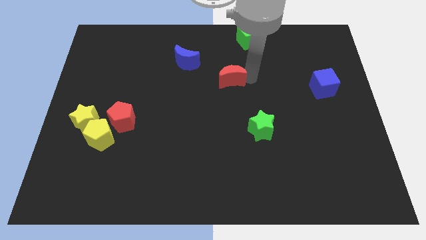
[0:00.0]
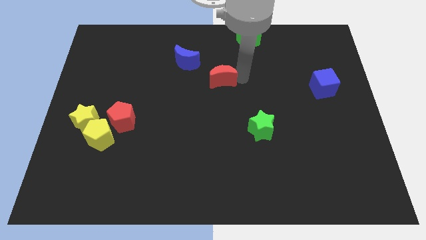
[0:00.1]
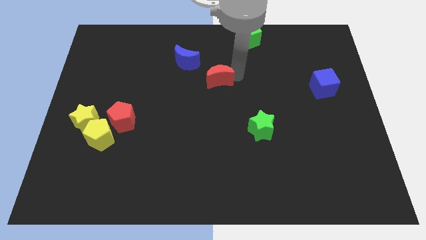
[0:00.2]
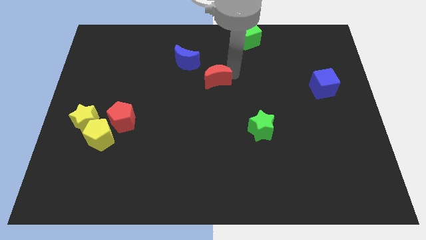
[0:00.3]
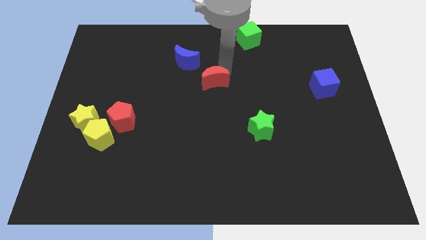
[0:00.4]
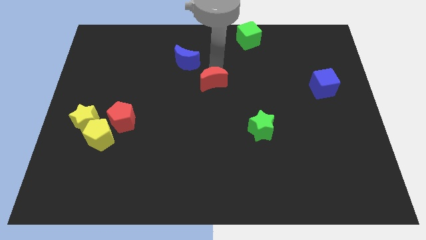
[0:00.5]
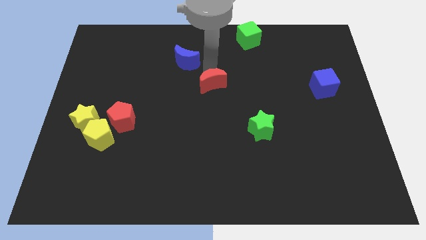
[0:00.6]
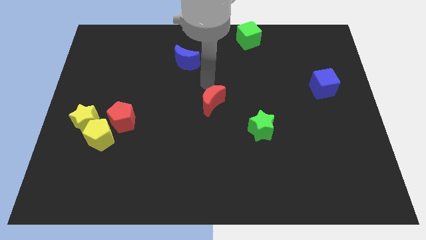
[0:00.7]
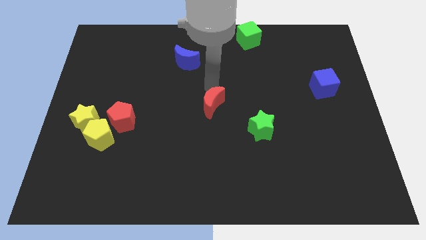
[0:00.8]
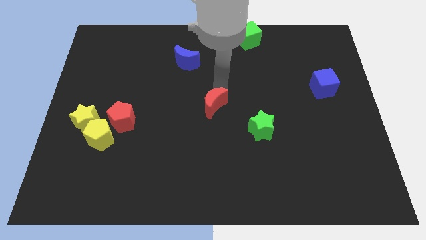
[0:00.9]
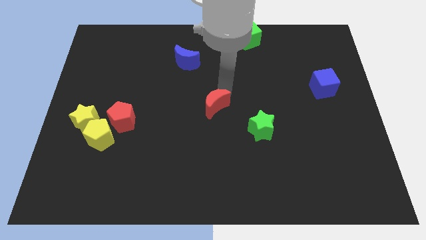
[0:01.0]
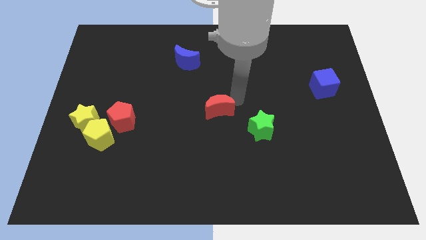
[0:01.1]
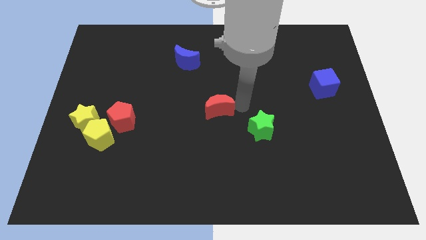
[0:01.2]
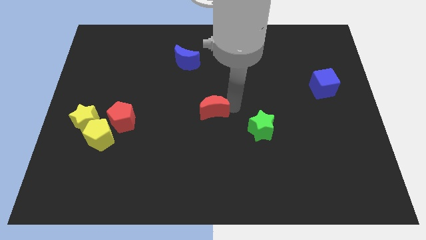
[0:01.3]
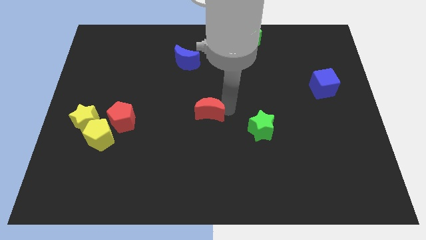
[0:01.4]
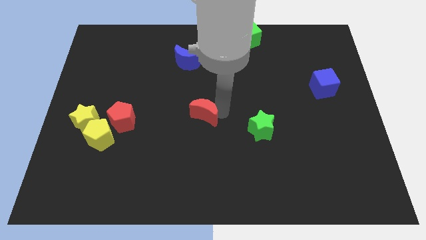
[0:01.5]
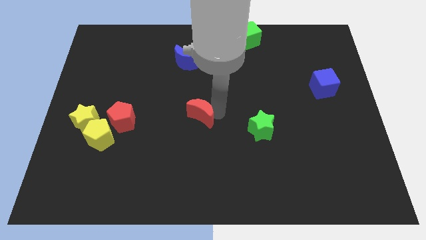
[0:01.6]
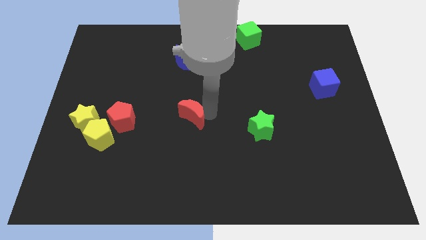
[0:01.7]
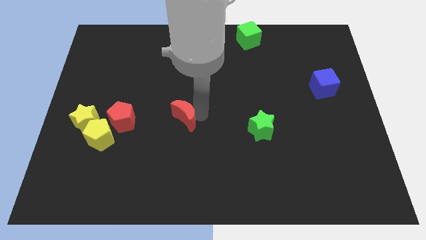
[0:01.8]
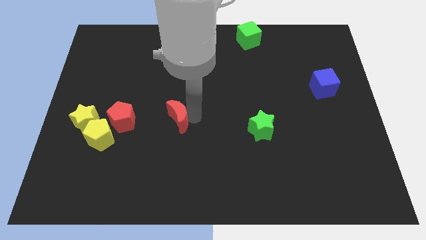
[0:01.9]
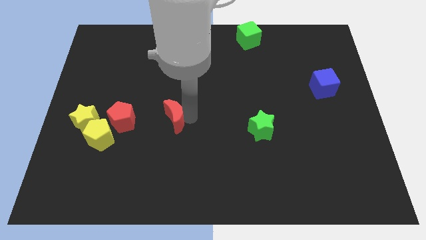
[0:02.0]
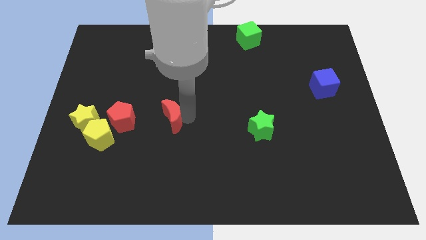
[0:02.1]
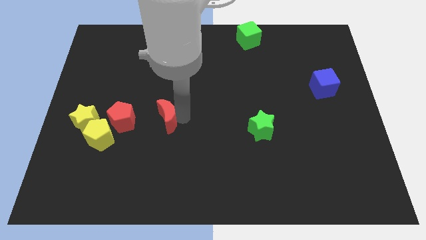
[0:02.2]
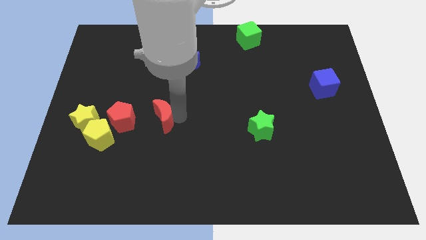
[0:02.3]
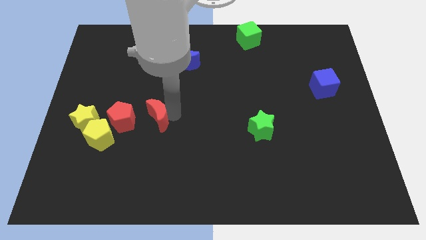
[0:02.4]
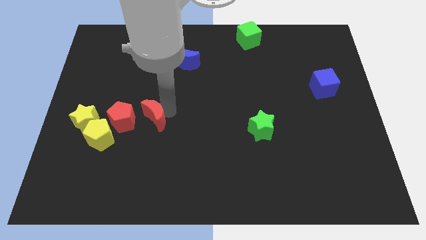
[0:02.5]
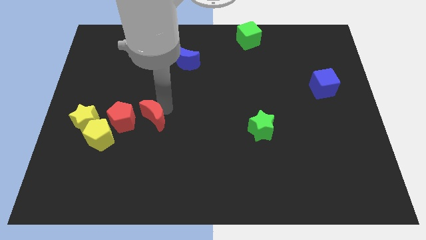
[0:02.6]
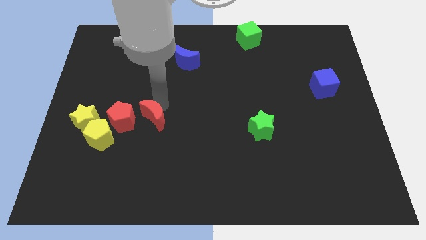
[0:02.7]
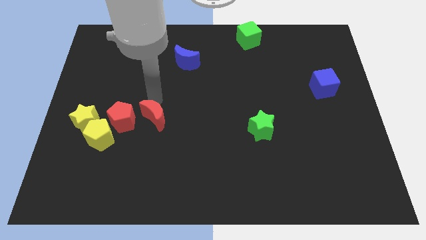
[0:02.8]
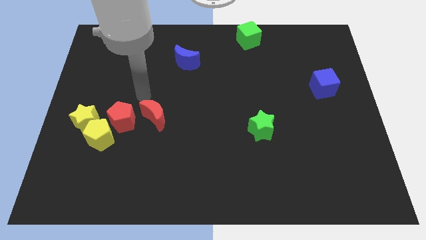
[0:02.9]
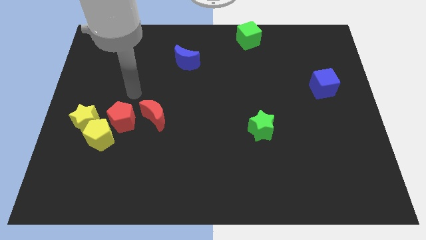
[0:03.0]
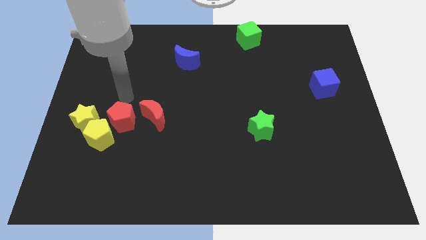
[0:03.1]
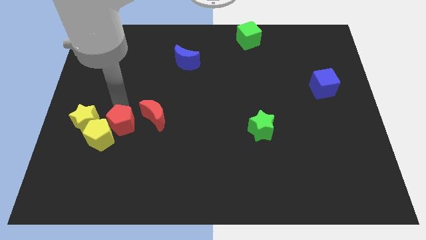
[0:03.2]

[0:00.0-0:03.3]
put the red moon on the right side of the red pentagon horizontally

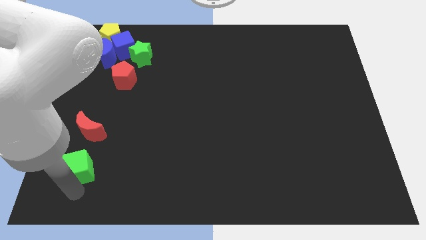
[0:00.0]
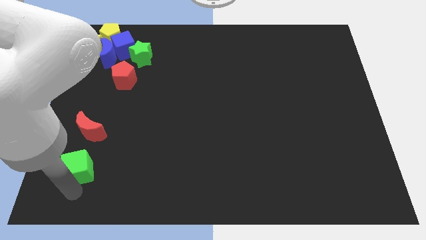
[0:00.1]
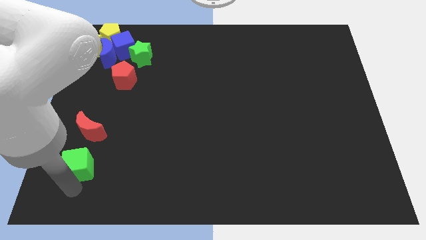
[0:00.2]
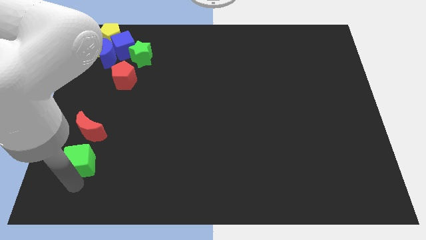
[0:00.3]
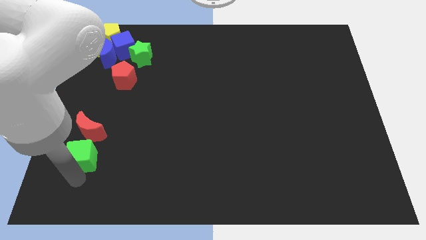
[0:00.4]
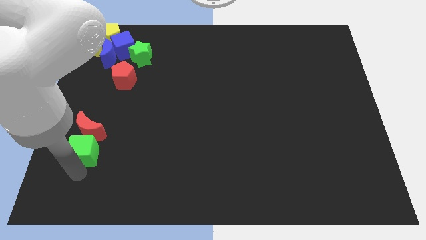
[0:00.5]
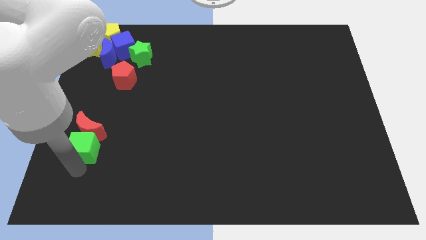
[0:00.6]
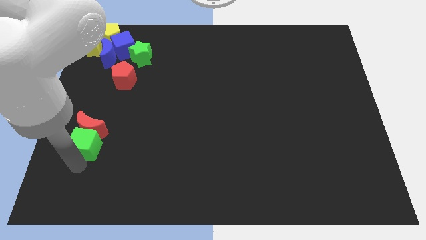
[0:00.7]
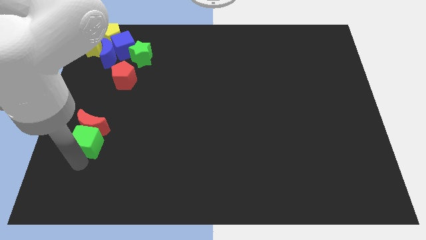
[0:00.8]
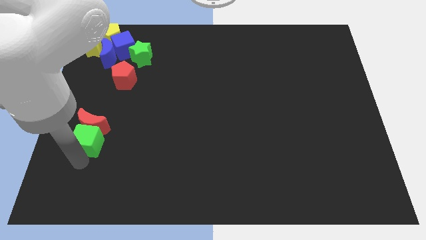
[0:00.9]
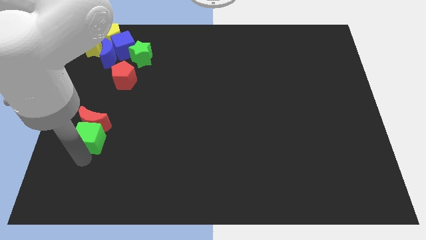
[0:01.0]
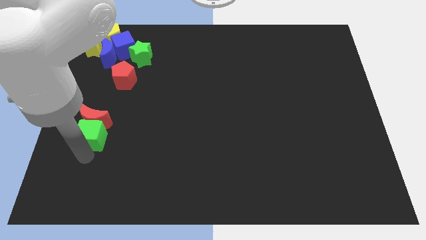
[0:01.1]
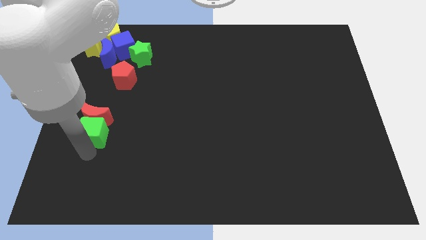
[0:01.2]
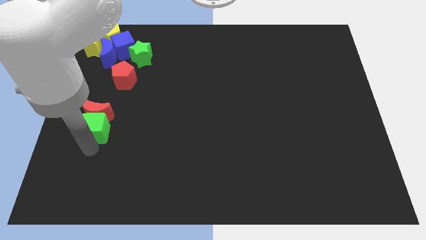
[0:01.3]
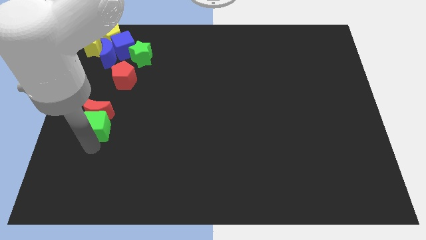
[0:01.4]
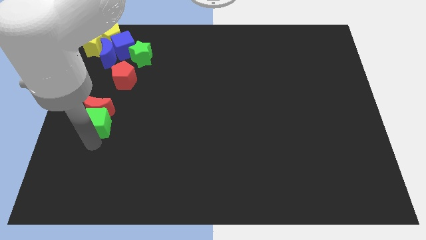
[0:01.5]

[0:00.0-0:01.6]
push the green cube into the red crescent

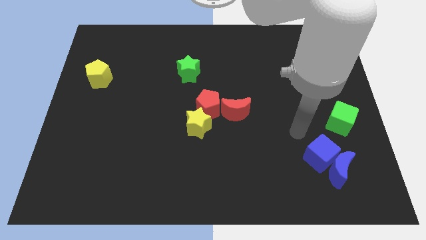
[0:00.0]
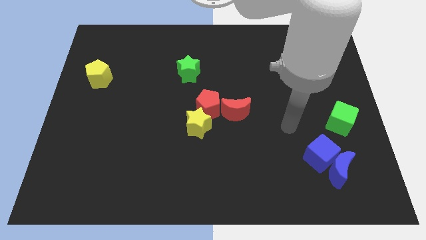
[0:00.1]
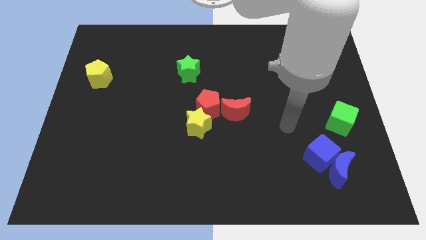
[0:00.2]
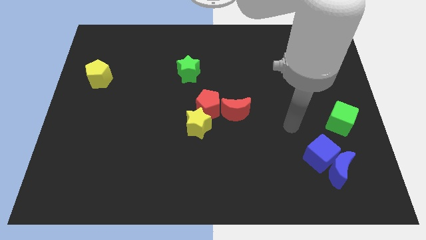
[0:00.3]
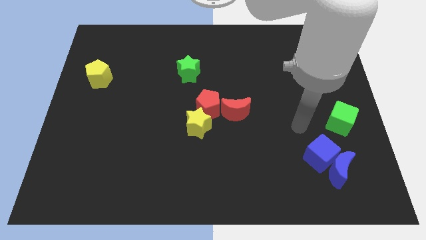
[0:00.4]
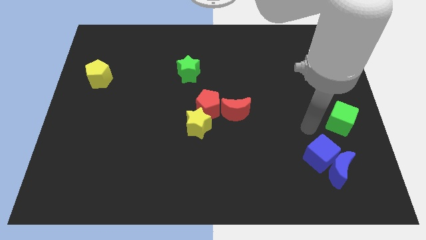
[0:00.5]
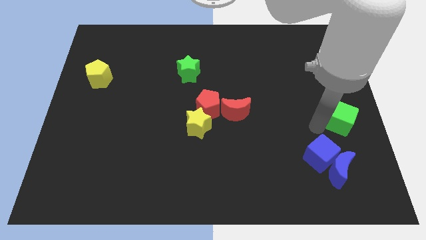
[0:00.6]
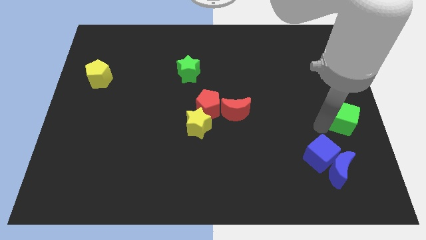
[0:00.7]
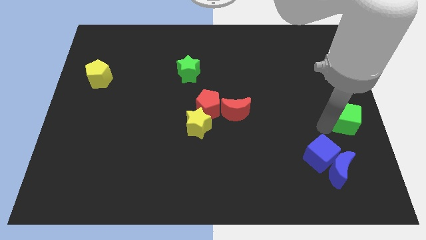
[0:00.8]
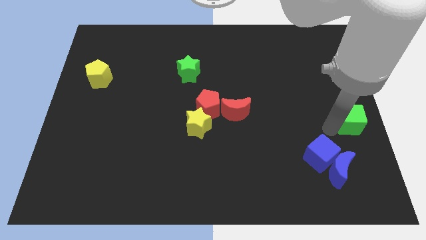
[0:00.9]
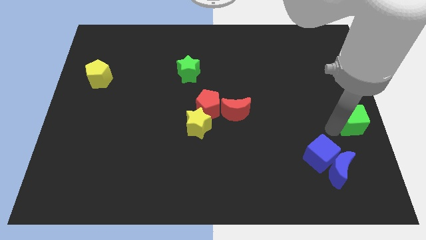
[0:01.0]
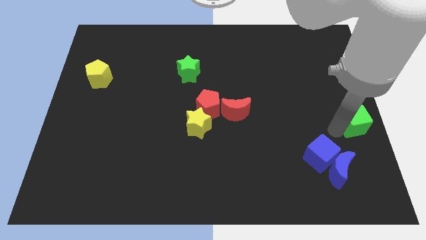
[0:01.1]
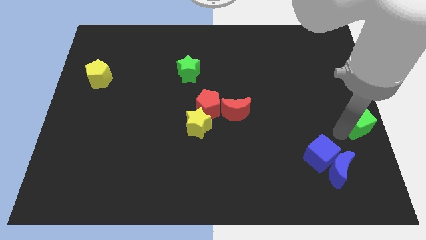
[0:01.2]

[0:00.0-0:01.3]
push the green cube towards the right side of the board

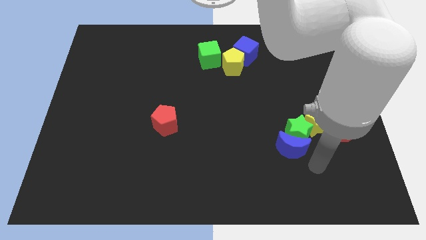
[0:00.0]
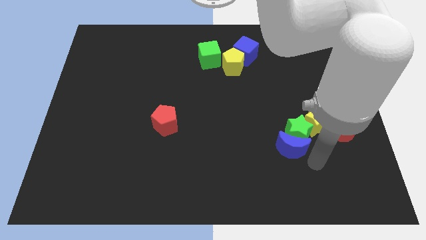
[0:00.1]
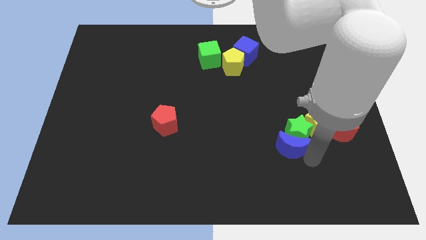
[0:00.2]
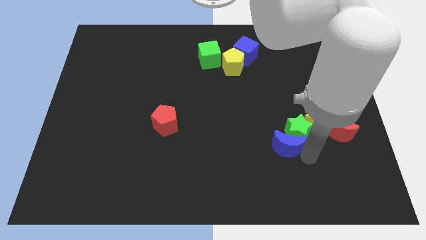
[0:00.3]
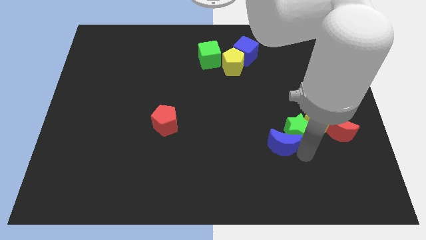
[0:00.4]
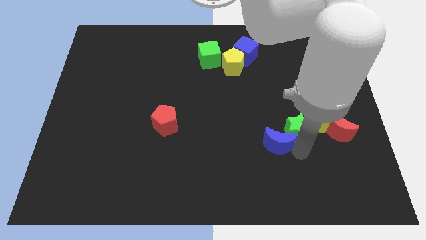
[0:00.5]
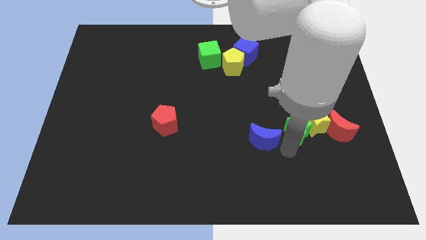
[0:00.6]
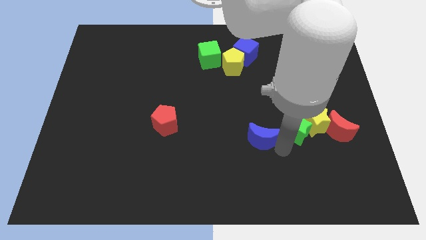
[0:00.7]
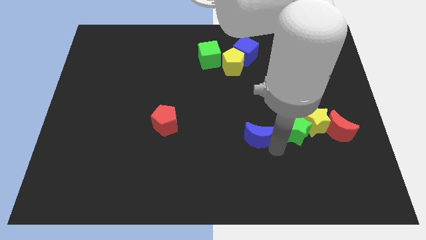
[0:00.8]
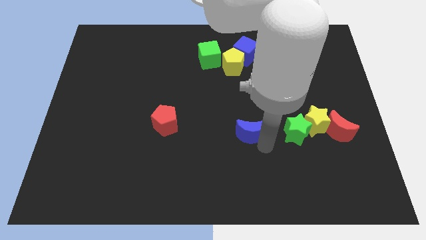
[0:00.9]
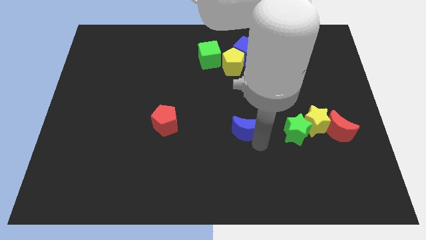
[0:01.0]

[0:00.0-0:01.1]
push the blue crescent slightly away from the green star

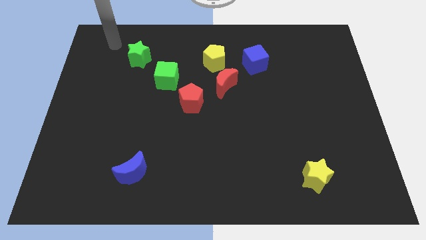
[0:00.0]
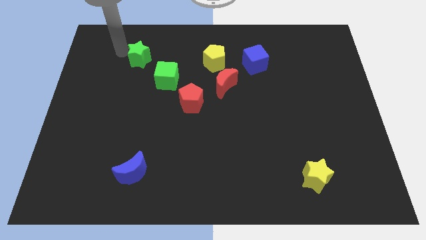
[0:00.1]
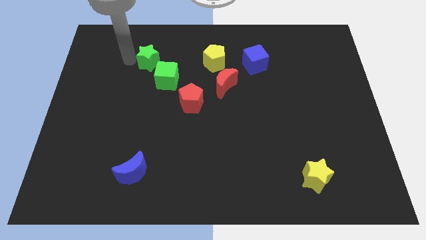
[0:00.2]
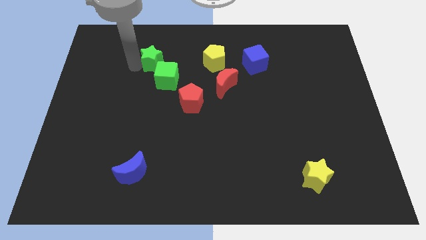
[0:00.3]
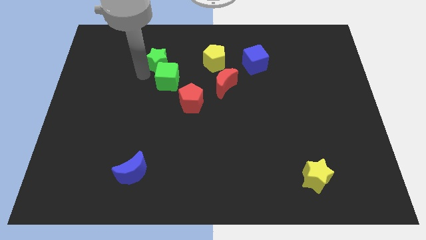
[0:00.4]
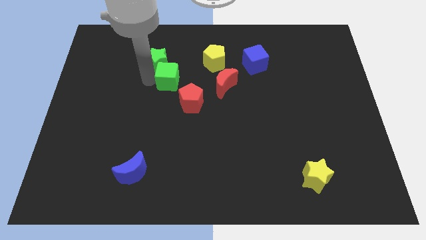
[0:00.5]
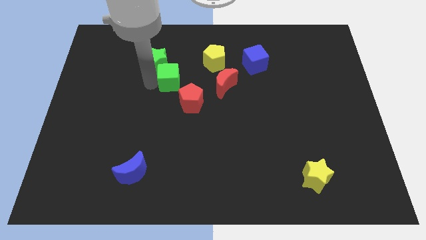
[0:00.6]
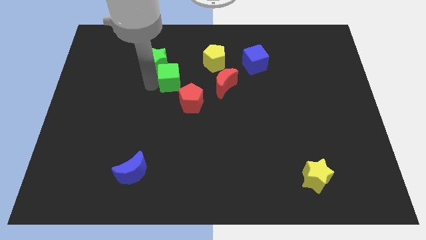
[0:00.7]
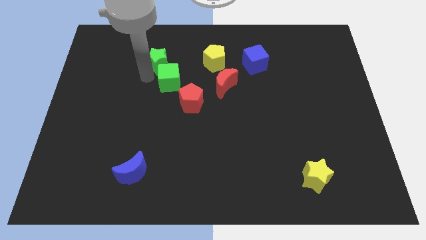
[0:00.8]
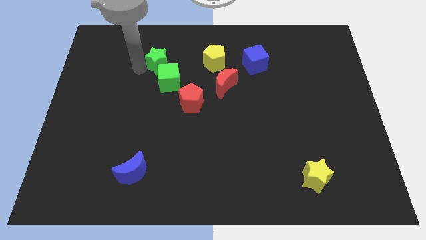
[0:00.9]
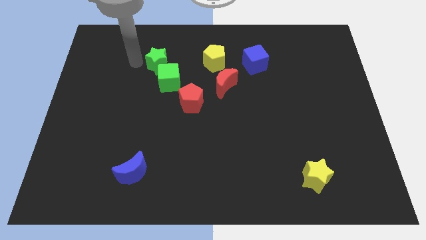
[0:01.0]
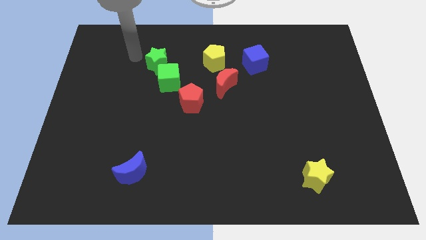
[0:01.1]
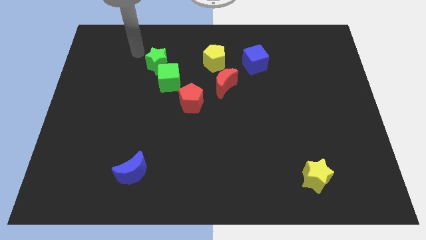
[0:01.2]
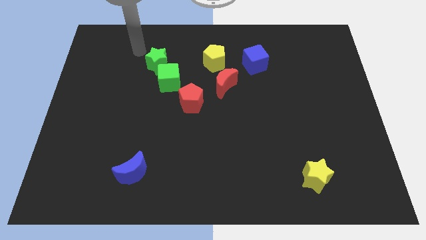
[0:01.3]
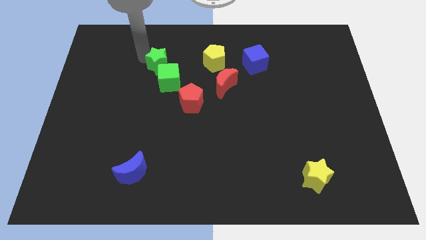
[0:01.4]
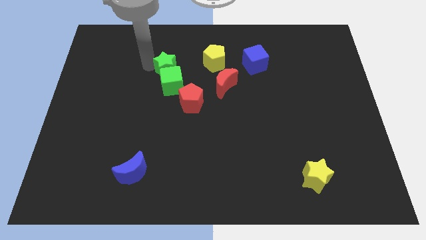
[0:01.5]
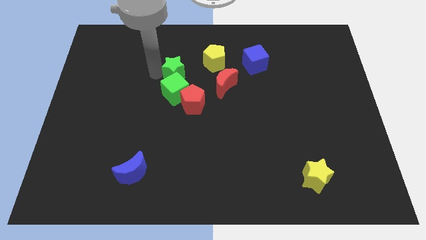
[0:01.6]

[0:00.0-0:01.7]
place green star above green cube
